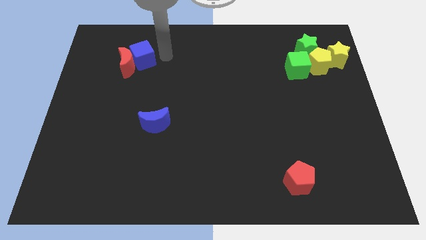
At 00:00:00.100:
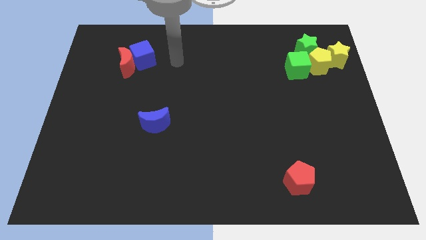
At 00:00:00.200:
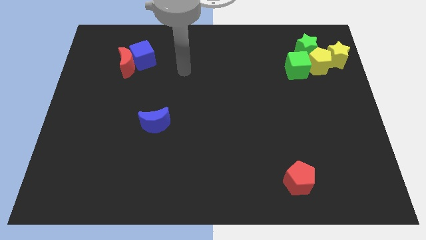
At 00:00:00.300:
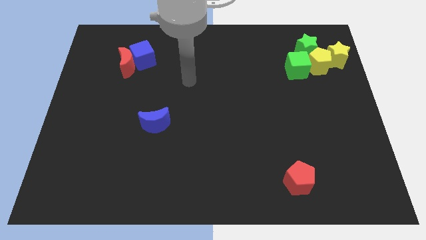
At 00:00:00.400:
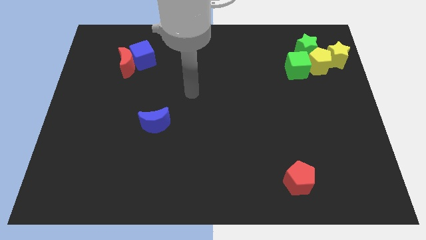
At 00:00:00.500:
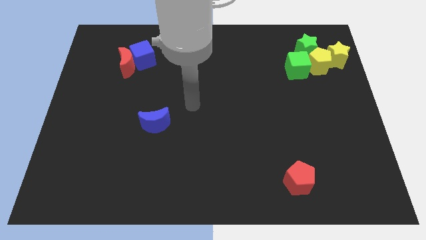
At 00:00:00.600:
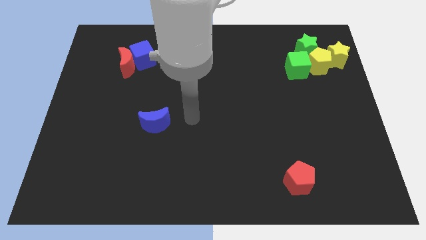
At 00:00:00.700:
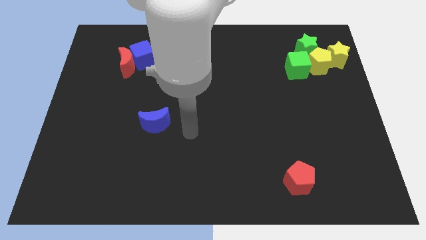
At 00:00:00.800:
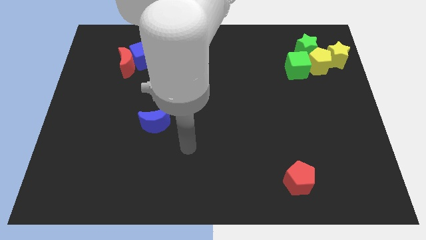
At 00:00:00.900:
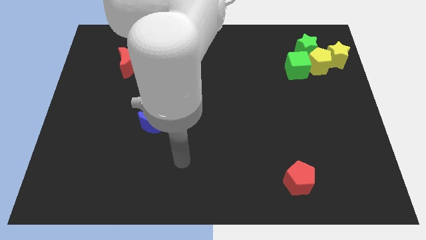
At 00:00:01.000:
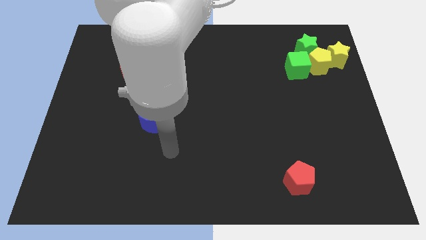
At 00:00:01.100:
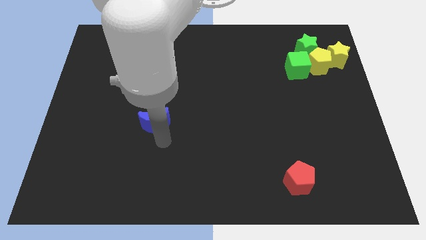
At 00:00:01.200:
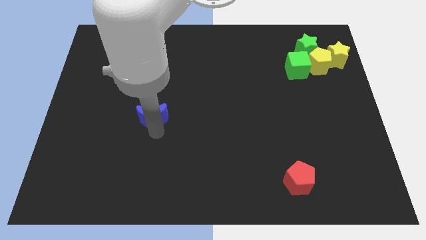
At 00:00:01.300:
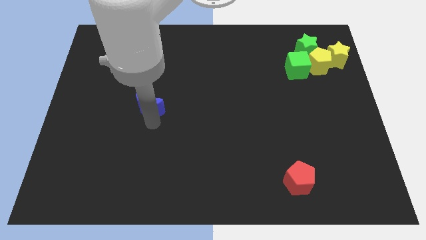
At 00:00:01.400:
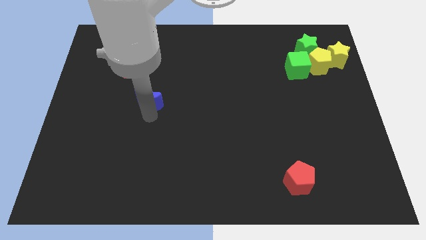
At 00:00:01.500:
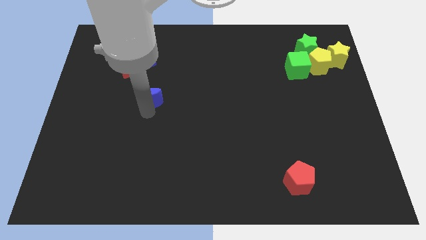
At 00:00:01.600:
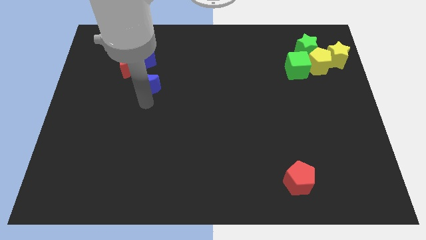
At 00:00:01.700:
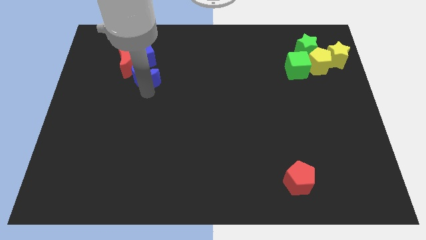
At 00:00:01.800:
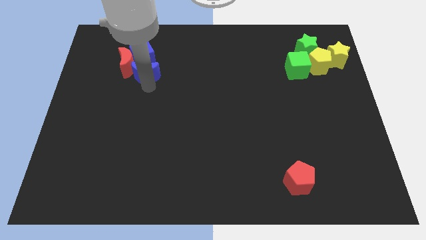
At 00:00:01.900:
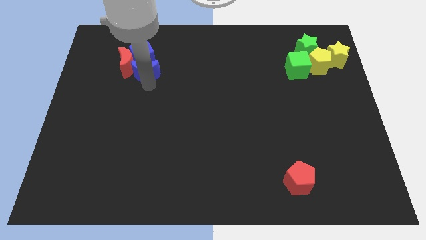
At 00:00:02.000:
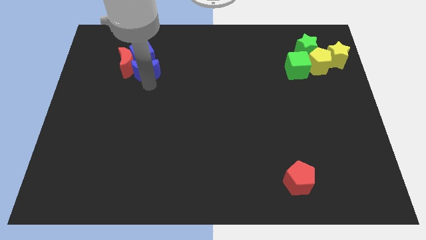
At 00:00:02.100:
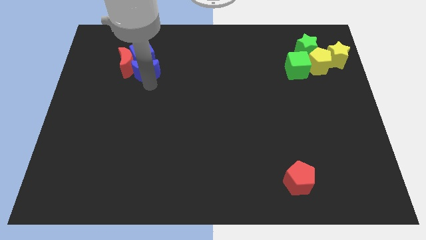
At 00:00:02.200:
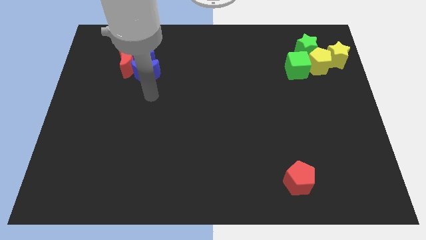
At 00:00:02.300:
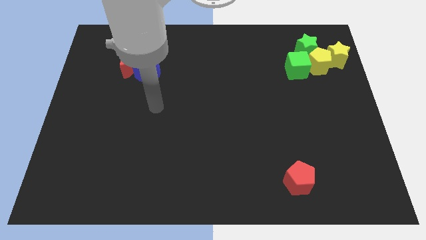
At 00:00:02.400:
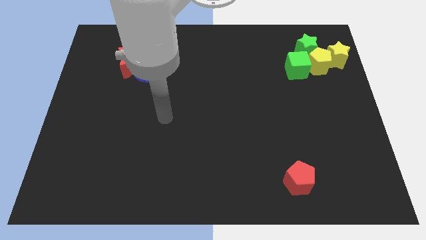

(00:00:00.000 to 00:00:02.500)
push the blue moon towards the red moon and blue cube

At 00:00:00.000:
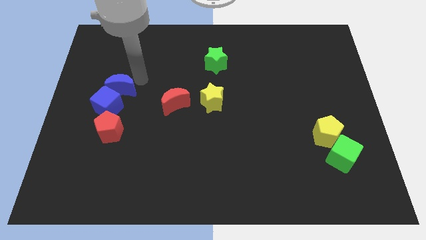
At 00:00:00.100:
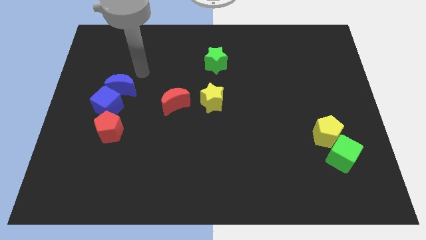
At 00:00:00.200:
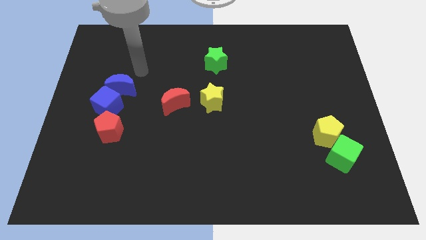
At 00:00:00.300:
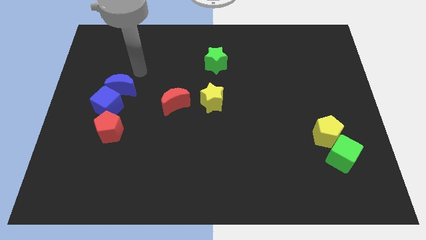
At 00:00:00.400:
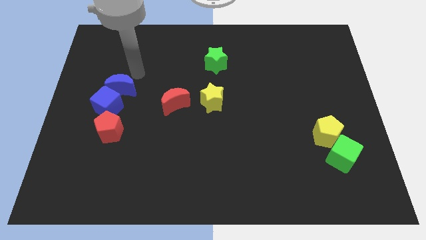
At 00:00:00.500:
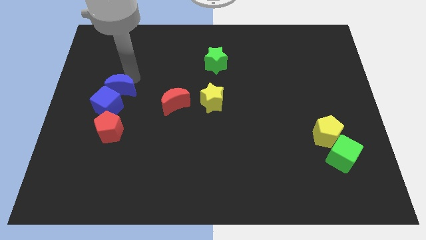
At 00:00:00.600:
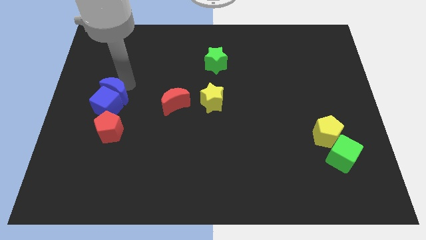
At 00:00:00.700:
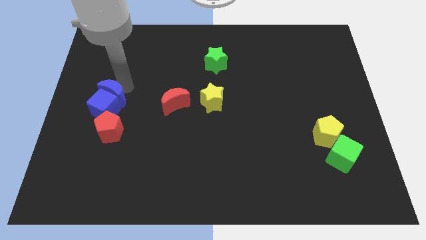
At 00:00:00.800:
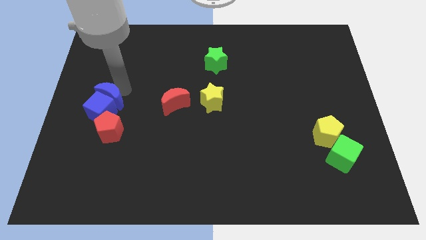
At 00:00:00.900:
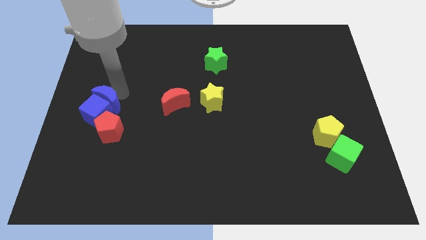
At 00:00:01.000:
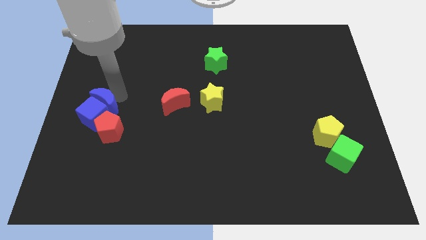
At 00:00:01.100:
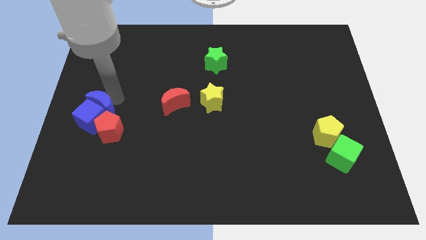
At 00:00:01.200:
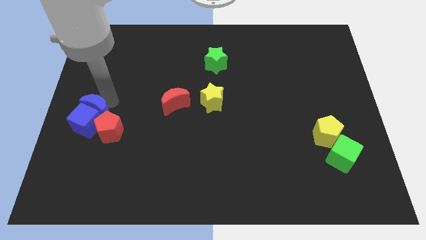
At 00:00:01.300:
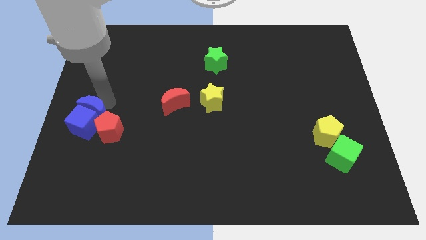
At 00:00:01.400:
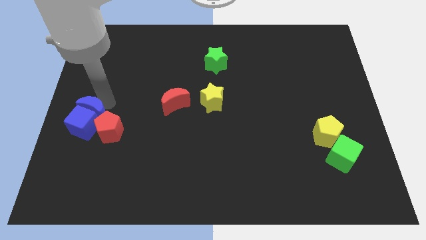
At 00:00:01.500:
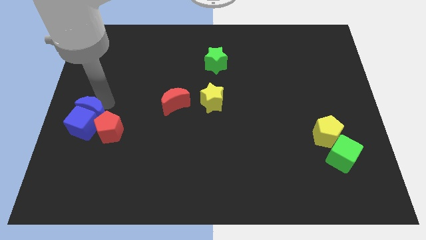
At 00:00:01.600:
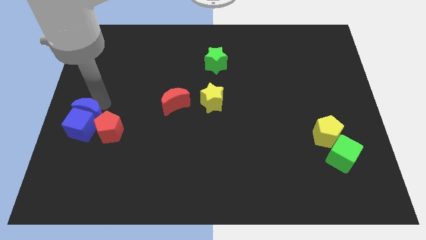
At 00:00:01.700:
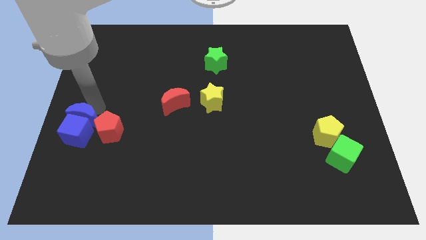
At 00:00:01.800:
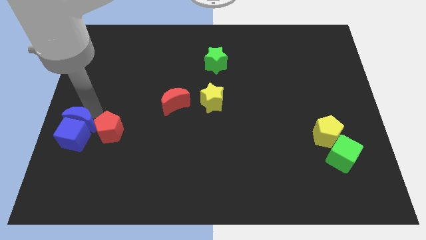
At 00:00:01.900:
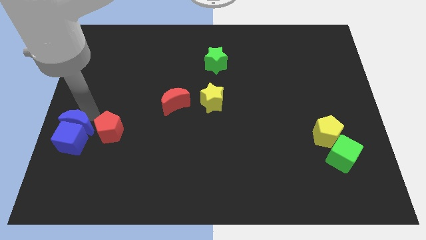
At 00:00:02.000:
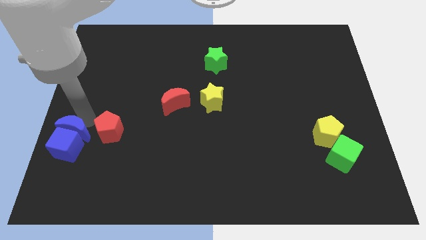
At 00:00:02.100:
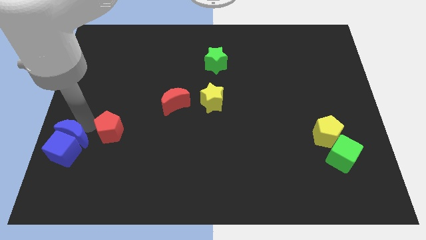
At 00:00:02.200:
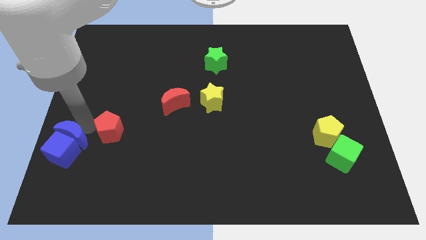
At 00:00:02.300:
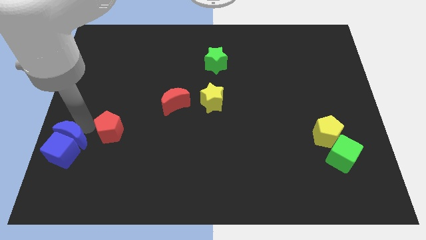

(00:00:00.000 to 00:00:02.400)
push the blue blocks towards bottom side left

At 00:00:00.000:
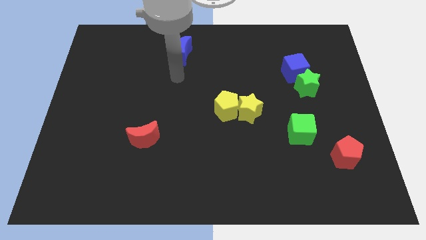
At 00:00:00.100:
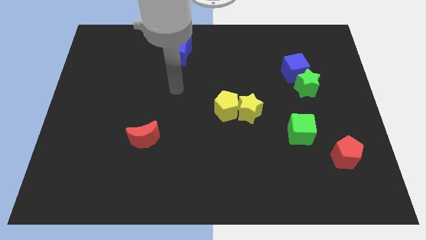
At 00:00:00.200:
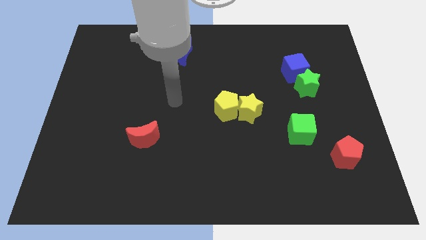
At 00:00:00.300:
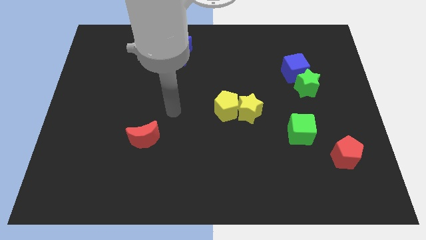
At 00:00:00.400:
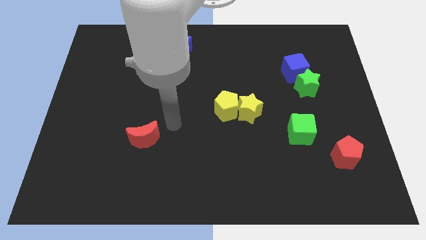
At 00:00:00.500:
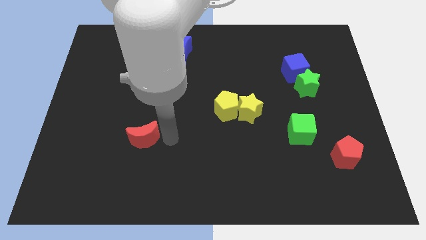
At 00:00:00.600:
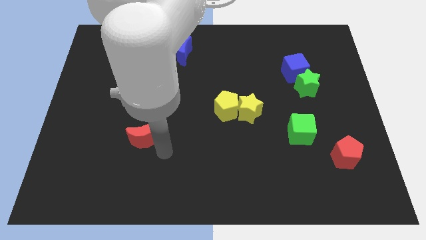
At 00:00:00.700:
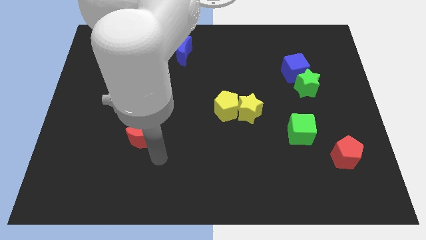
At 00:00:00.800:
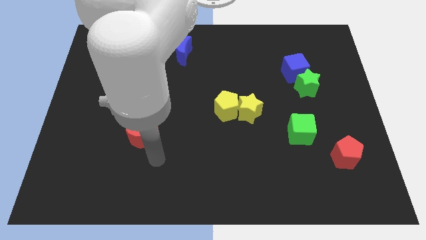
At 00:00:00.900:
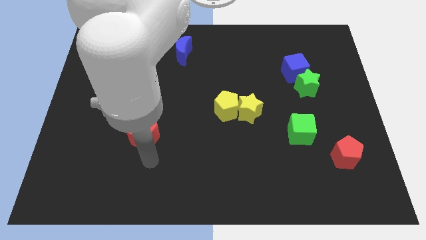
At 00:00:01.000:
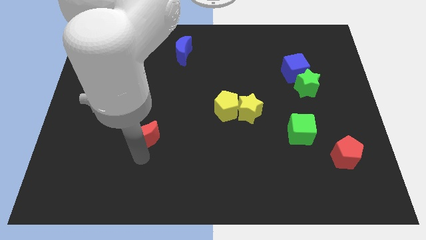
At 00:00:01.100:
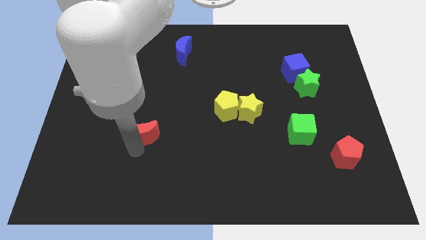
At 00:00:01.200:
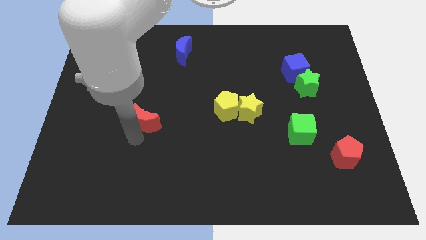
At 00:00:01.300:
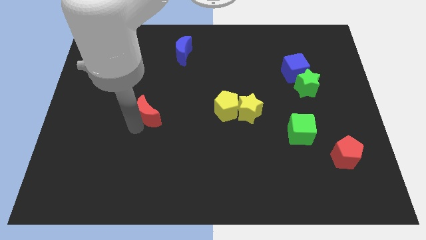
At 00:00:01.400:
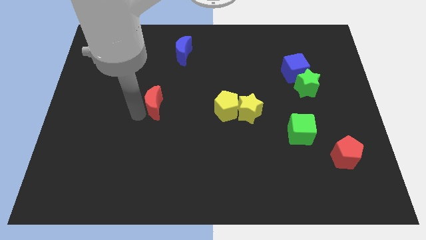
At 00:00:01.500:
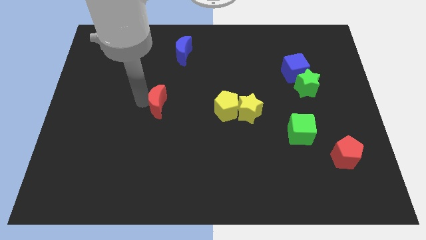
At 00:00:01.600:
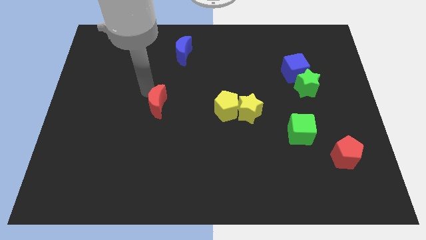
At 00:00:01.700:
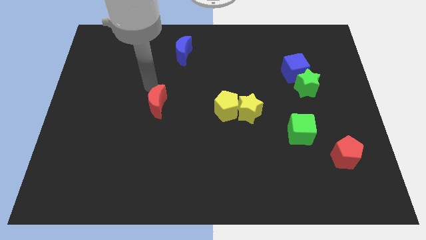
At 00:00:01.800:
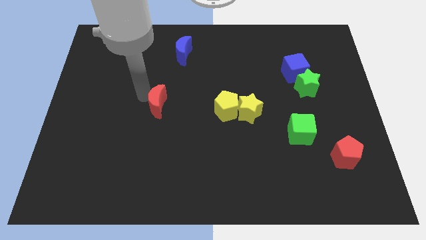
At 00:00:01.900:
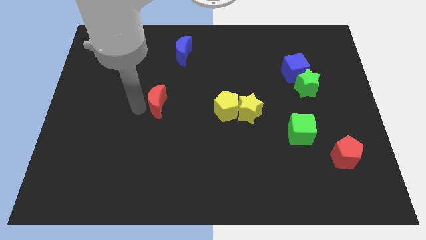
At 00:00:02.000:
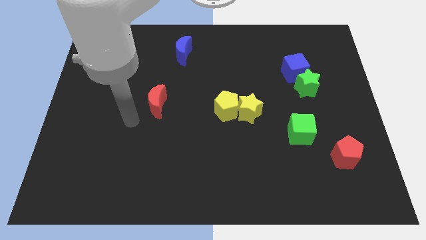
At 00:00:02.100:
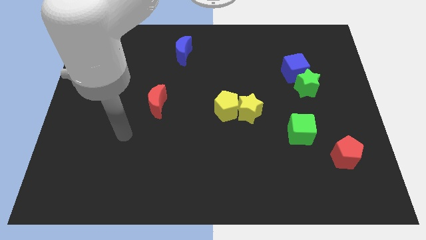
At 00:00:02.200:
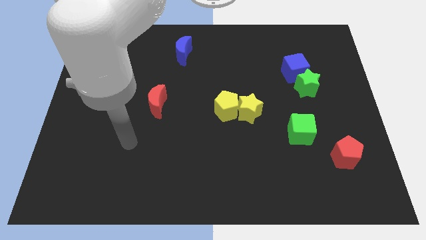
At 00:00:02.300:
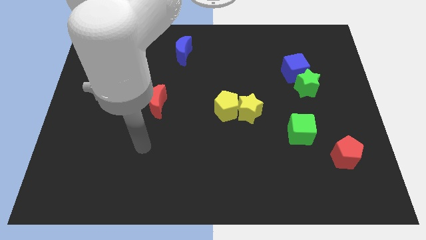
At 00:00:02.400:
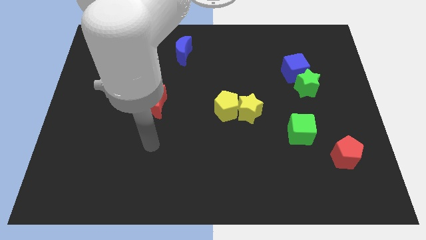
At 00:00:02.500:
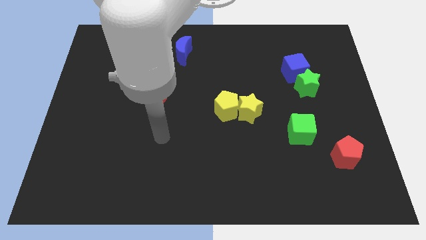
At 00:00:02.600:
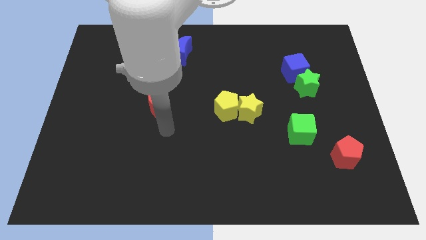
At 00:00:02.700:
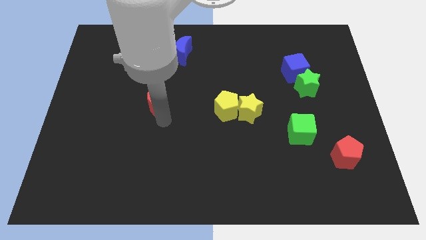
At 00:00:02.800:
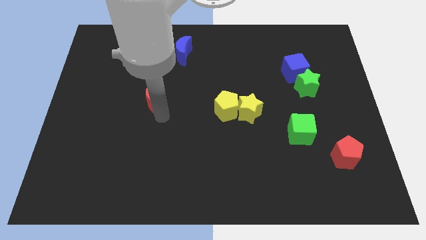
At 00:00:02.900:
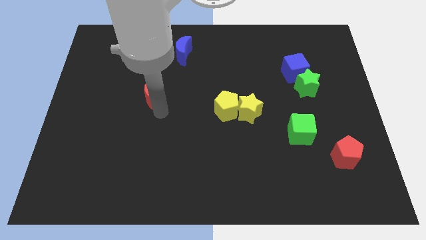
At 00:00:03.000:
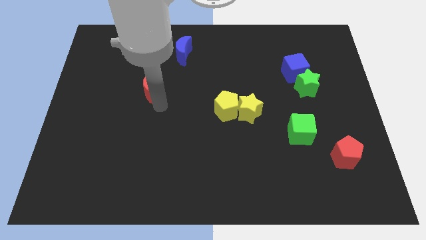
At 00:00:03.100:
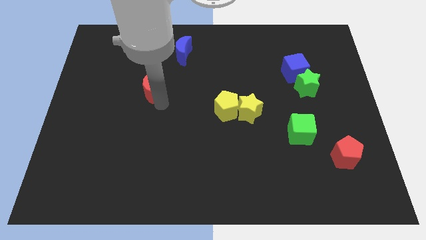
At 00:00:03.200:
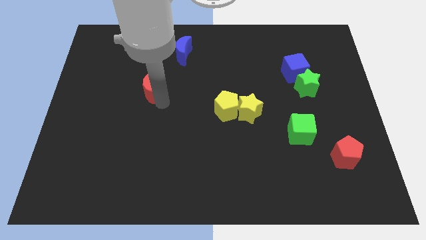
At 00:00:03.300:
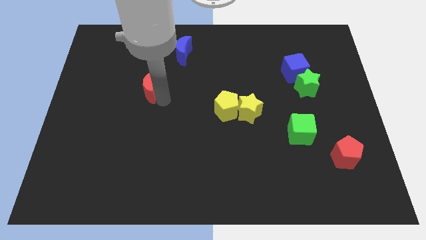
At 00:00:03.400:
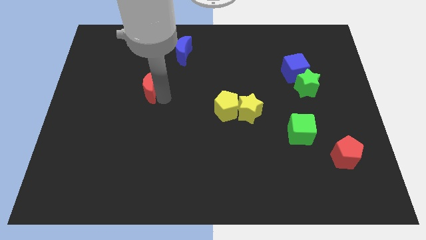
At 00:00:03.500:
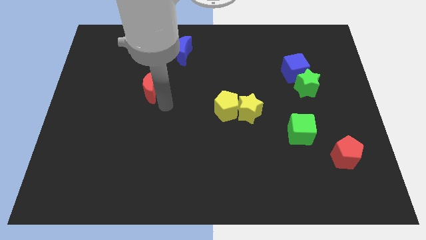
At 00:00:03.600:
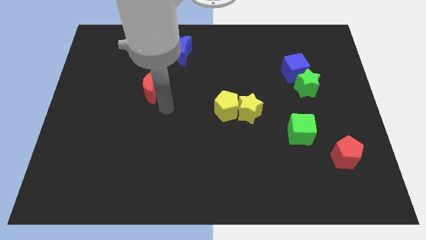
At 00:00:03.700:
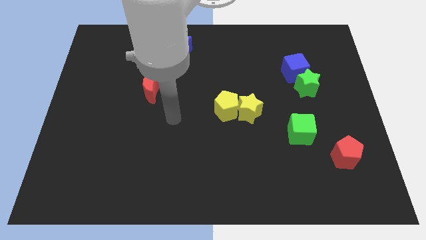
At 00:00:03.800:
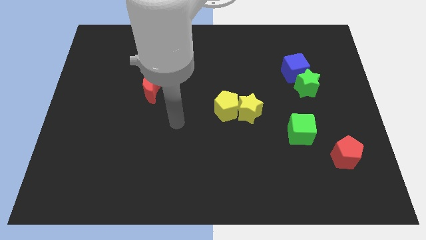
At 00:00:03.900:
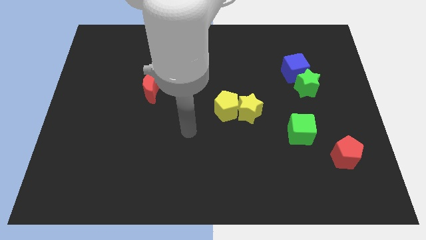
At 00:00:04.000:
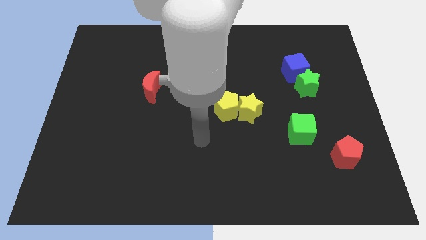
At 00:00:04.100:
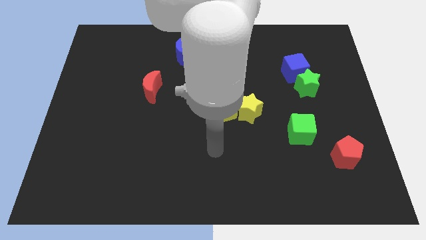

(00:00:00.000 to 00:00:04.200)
push the red crescent to the top of the board
